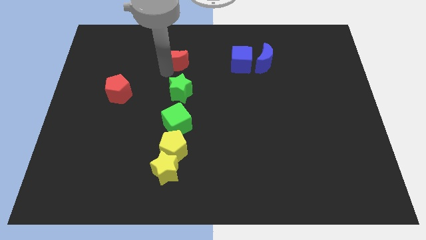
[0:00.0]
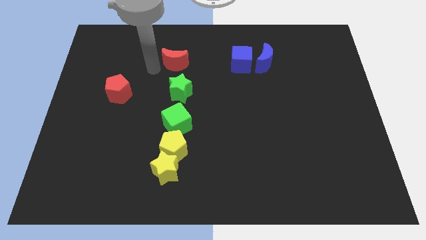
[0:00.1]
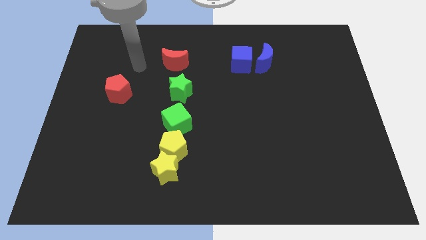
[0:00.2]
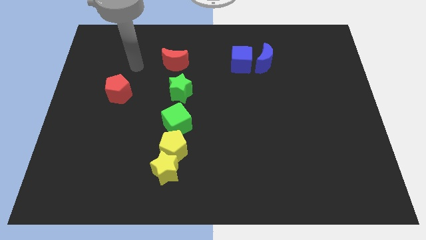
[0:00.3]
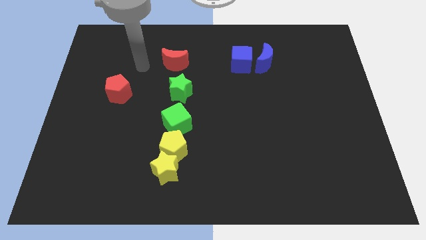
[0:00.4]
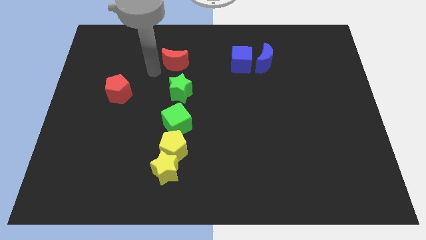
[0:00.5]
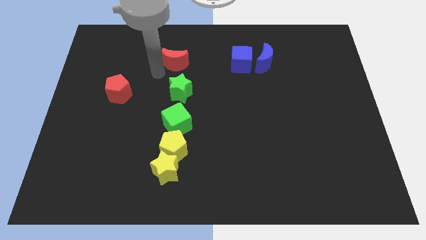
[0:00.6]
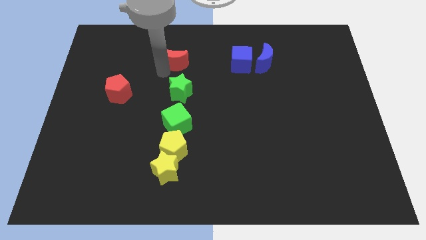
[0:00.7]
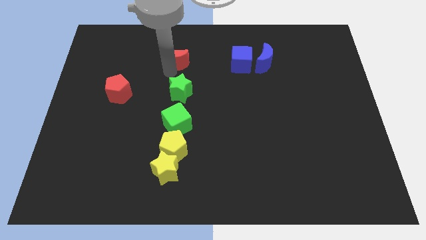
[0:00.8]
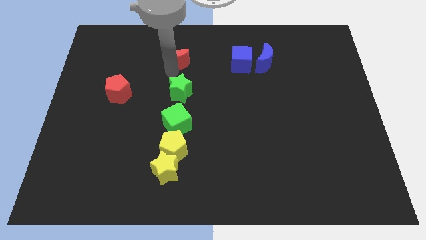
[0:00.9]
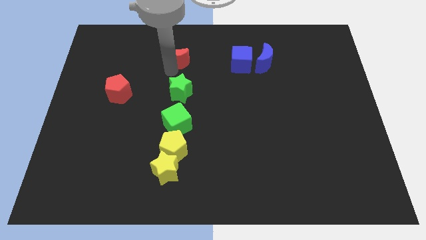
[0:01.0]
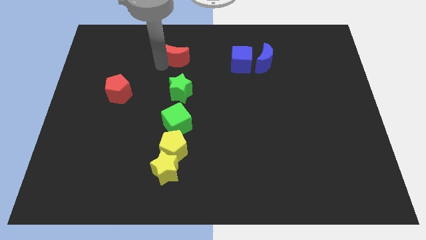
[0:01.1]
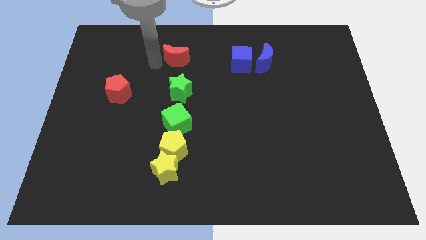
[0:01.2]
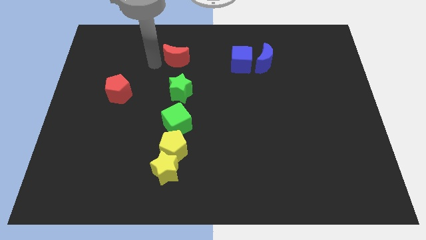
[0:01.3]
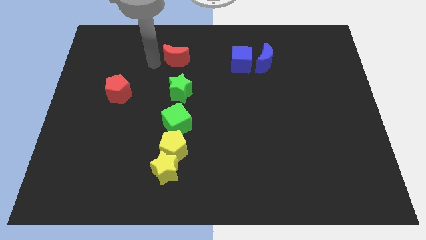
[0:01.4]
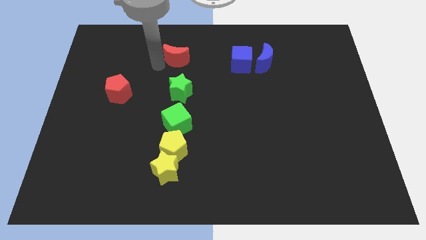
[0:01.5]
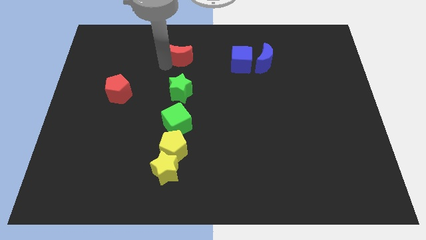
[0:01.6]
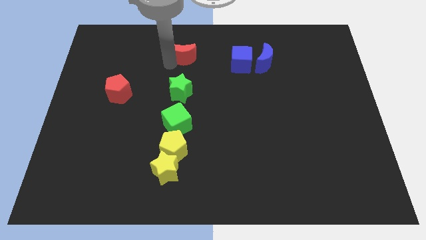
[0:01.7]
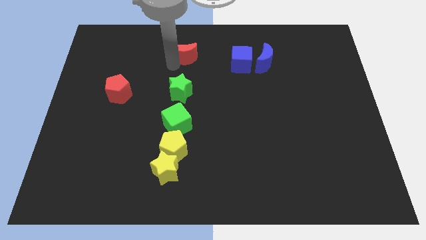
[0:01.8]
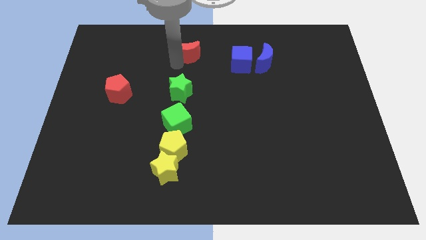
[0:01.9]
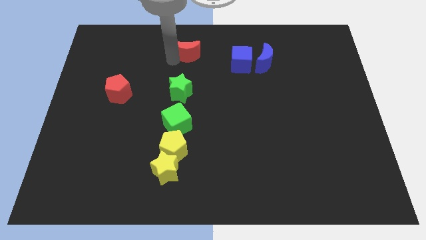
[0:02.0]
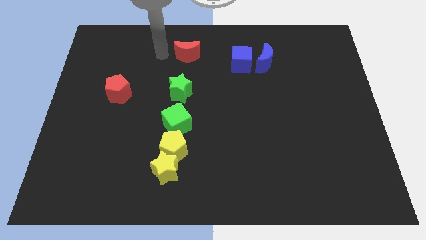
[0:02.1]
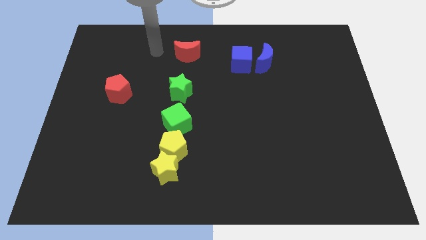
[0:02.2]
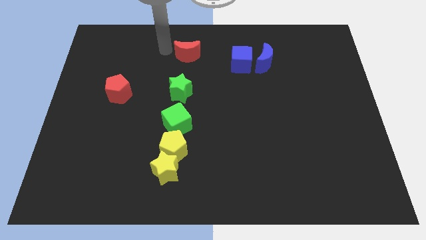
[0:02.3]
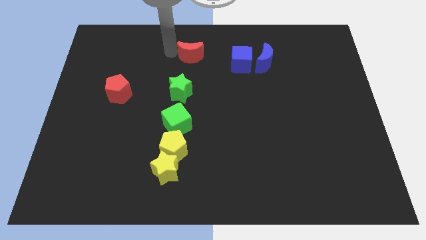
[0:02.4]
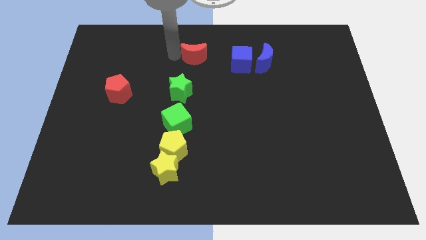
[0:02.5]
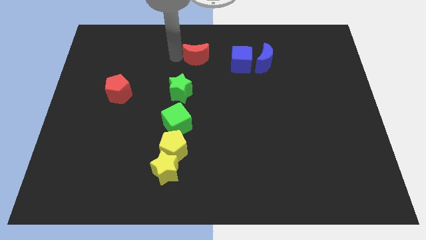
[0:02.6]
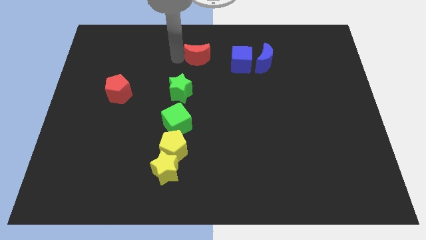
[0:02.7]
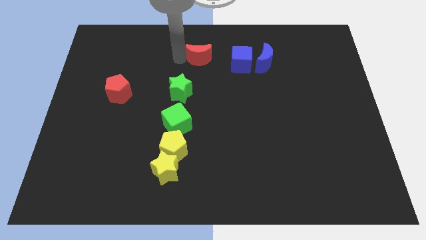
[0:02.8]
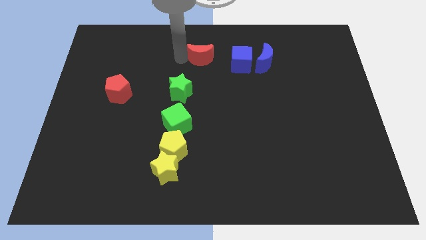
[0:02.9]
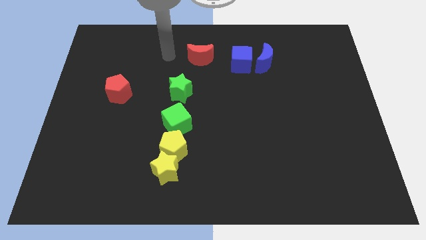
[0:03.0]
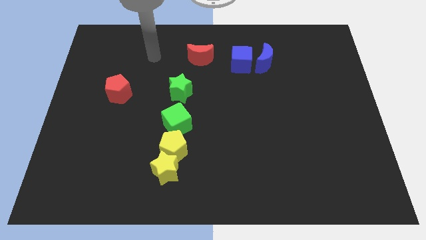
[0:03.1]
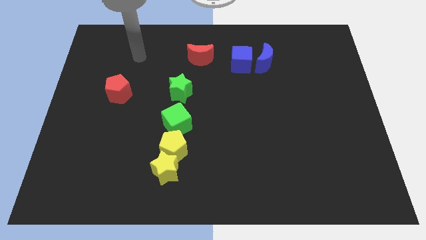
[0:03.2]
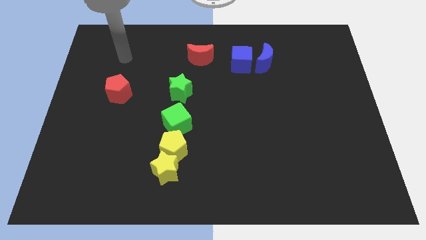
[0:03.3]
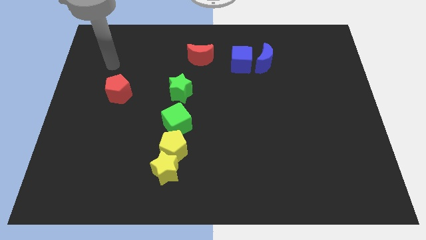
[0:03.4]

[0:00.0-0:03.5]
move the red moon to the left side of the blue cube

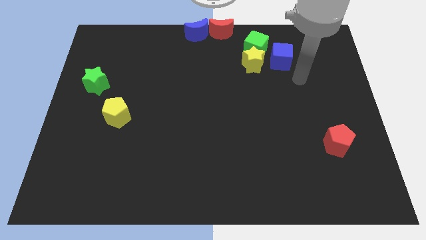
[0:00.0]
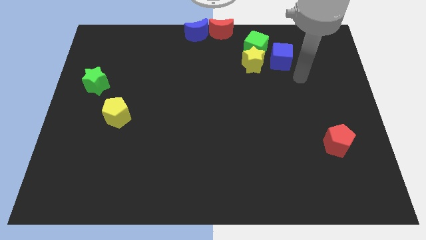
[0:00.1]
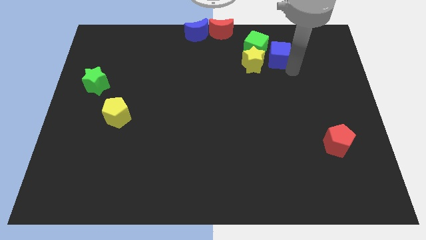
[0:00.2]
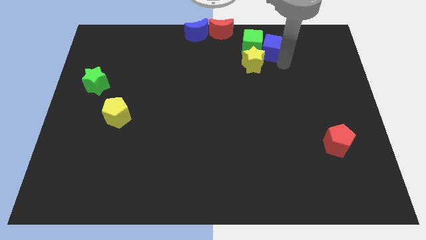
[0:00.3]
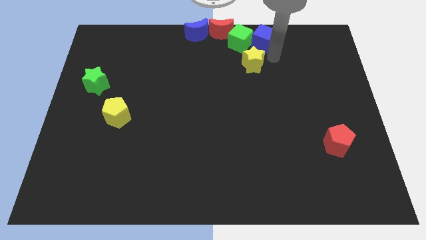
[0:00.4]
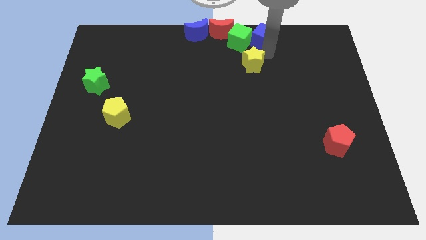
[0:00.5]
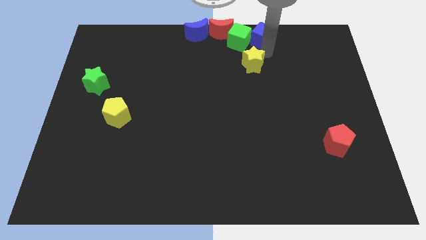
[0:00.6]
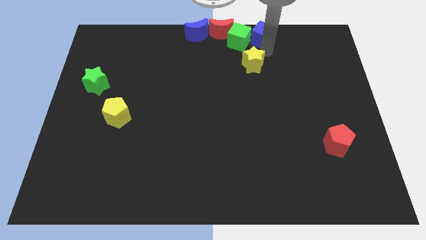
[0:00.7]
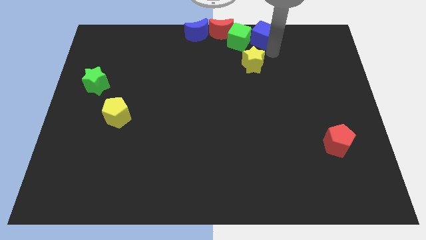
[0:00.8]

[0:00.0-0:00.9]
push the blue cube into the green cube

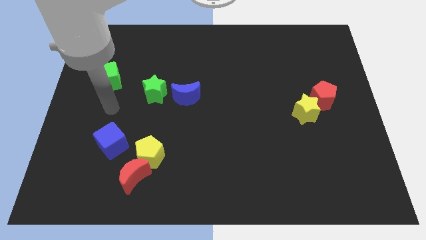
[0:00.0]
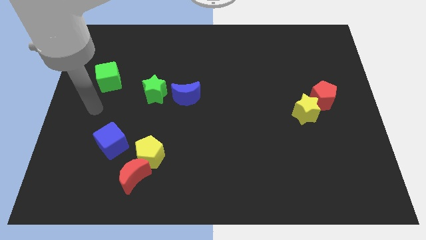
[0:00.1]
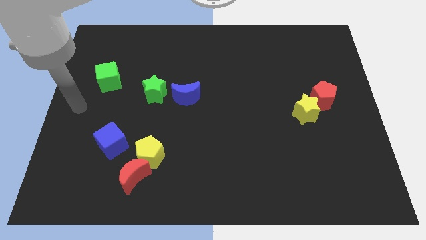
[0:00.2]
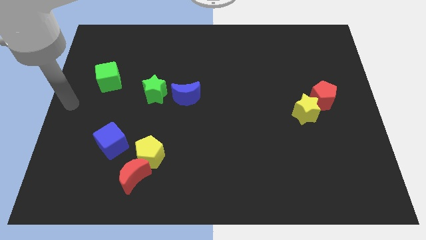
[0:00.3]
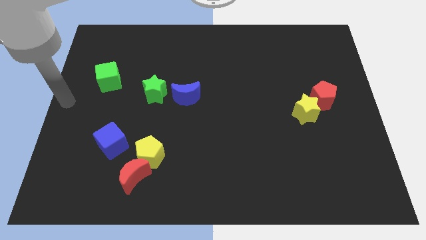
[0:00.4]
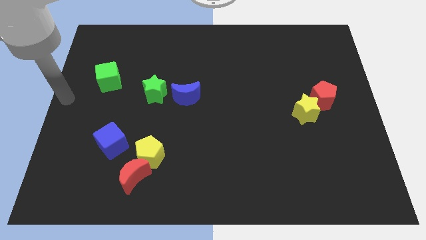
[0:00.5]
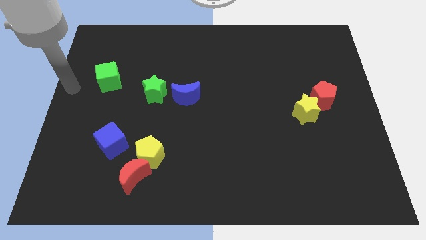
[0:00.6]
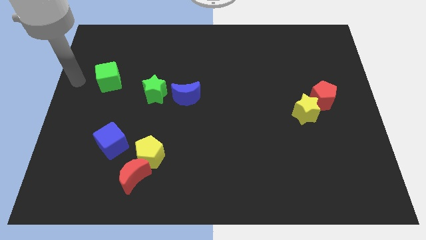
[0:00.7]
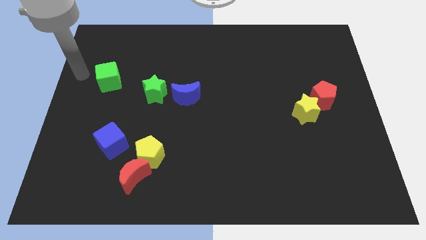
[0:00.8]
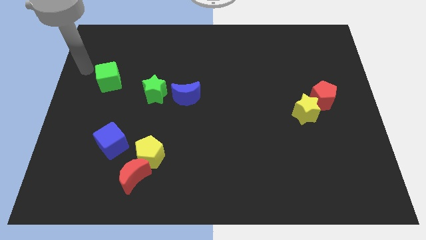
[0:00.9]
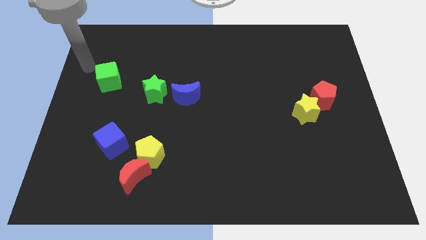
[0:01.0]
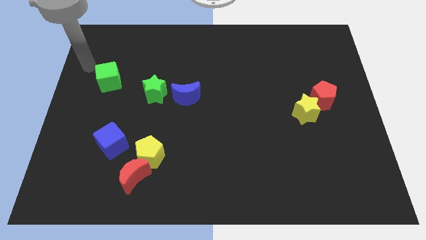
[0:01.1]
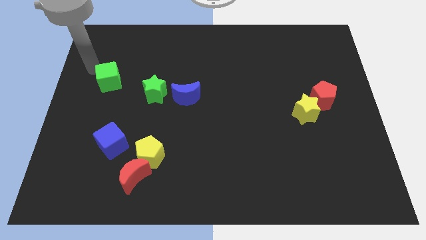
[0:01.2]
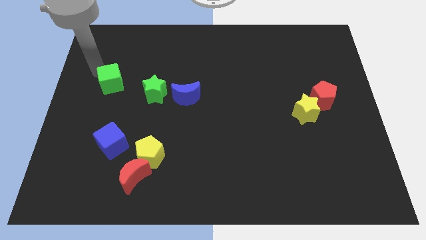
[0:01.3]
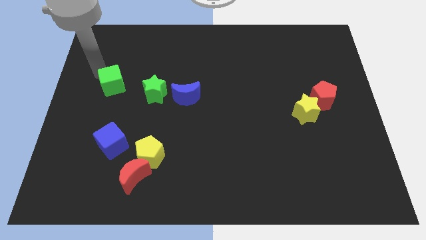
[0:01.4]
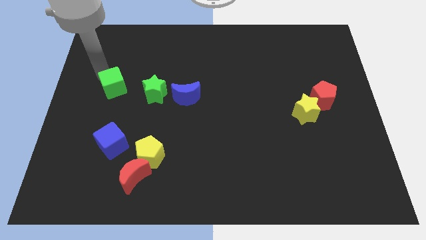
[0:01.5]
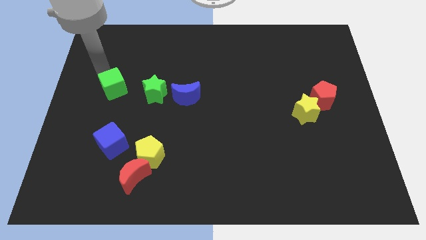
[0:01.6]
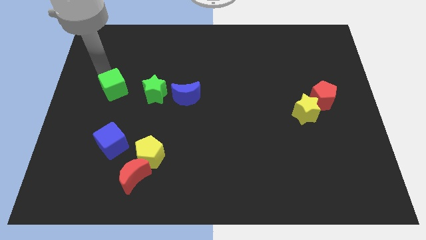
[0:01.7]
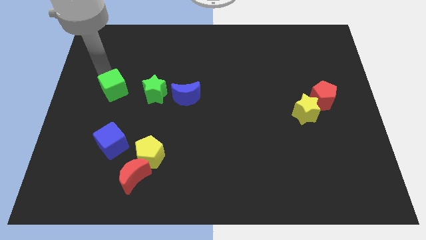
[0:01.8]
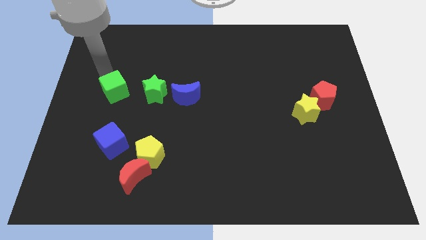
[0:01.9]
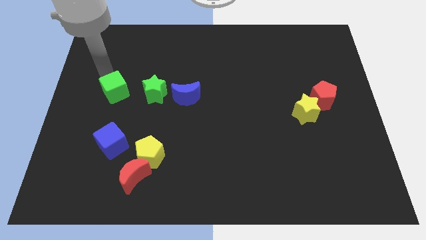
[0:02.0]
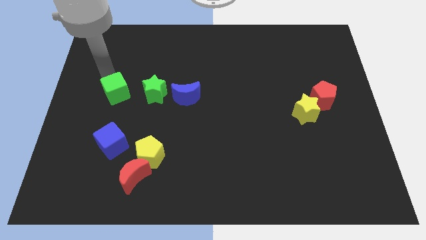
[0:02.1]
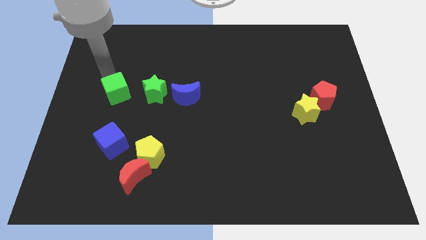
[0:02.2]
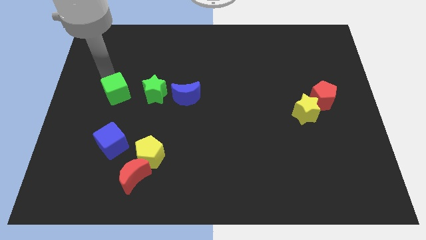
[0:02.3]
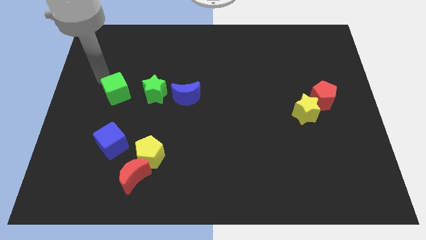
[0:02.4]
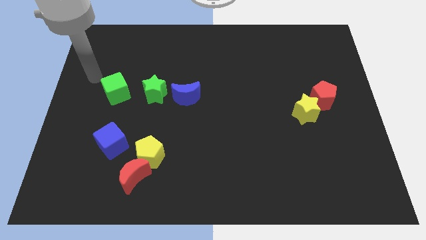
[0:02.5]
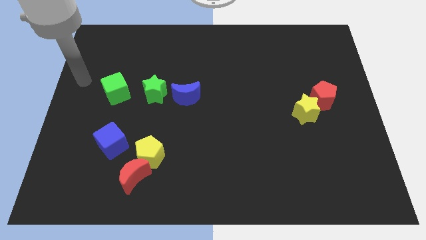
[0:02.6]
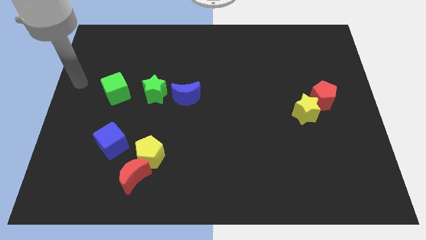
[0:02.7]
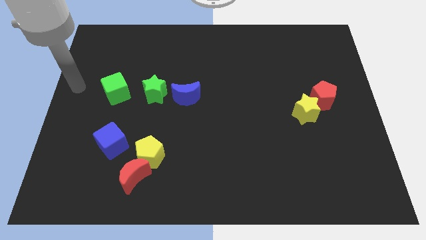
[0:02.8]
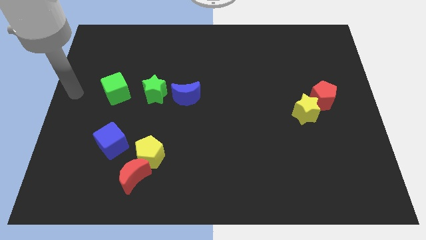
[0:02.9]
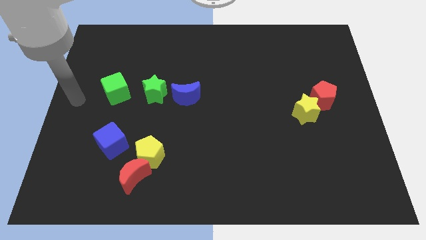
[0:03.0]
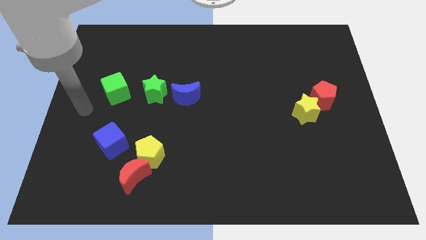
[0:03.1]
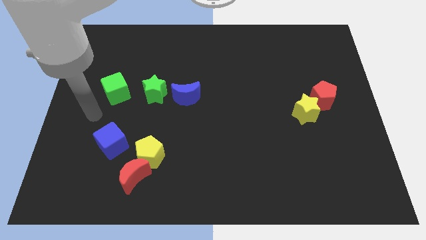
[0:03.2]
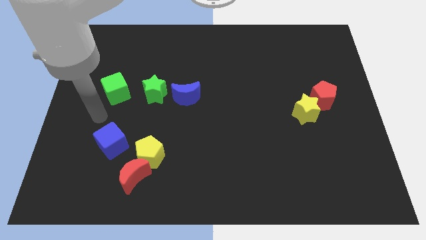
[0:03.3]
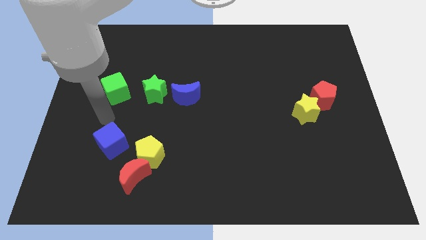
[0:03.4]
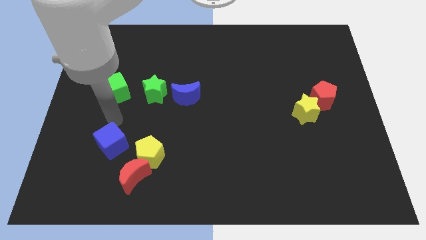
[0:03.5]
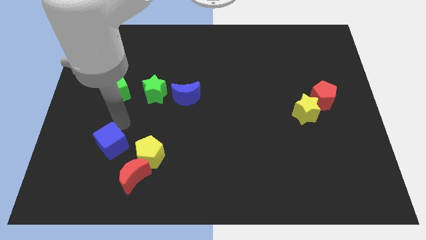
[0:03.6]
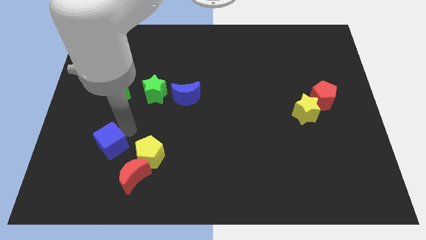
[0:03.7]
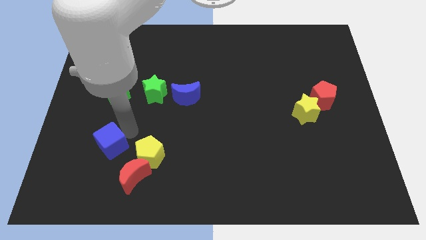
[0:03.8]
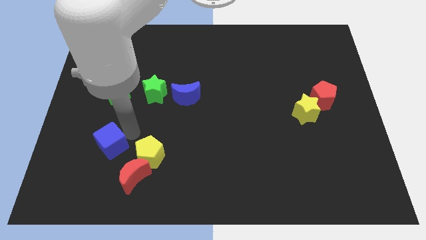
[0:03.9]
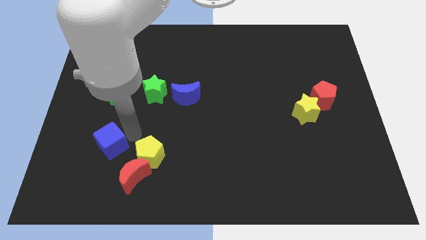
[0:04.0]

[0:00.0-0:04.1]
move the green cube to the left of the green star

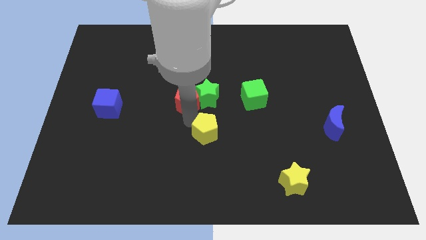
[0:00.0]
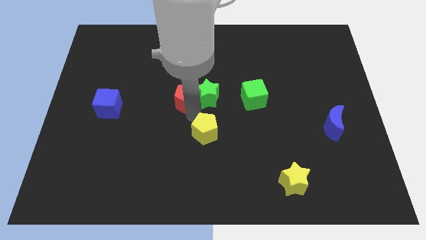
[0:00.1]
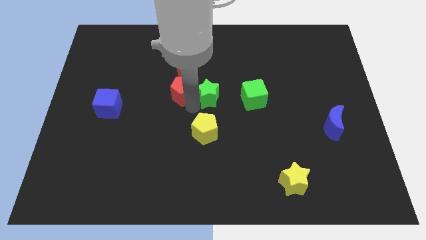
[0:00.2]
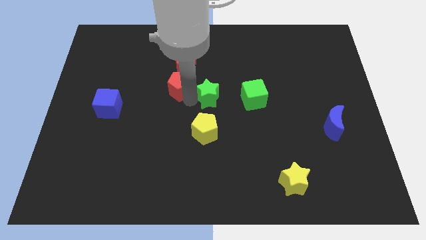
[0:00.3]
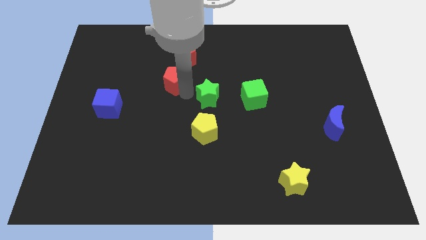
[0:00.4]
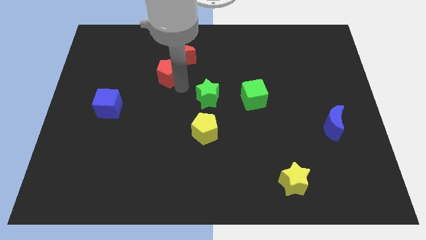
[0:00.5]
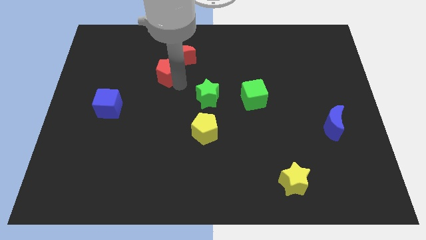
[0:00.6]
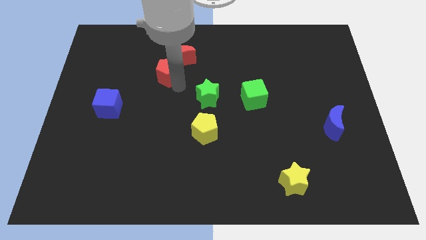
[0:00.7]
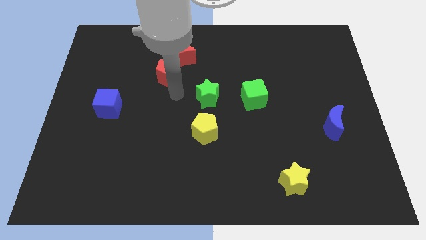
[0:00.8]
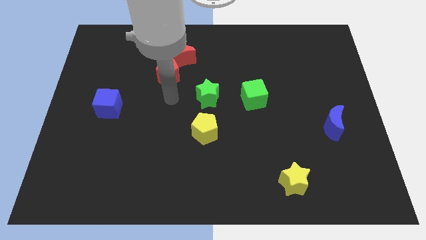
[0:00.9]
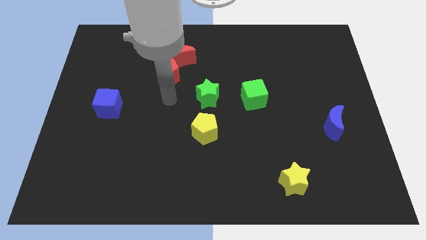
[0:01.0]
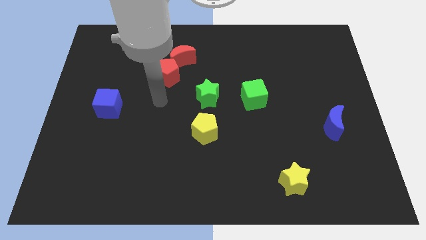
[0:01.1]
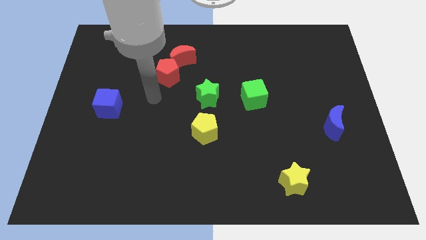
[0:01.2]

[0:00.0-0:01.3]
separate the red pentagon from the green star
